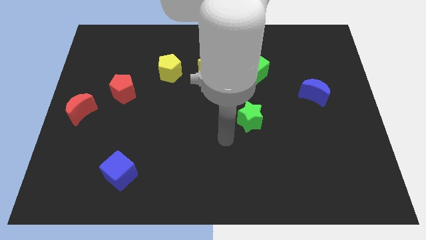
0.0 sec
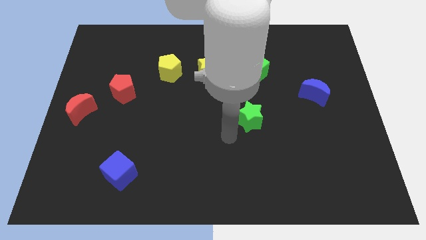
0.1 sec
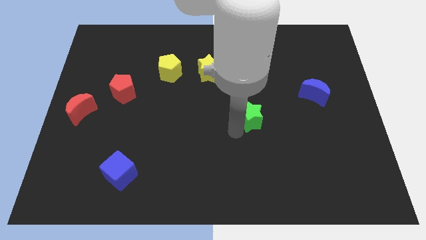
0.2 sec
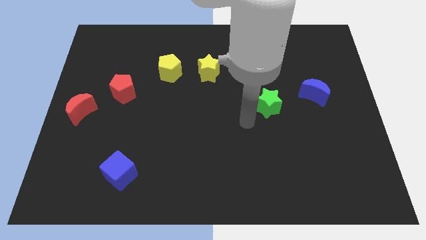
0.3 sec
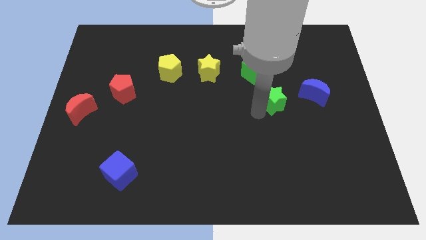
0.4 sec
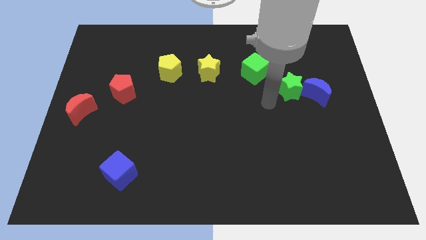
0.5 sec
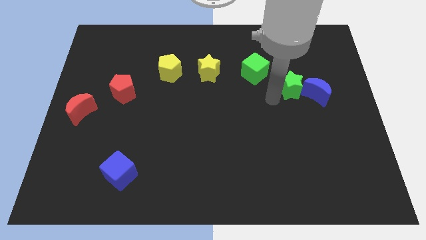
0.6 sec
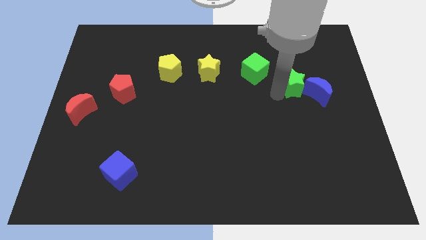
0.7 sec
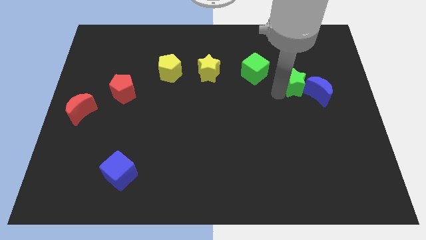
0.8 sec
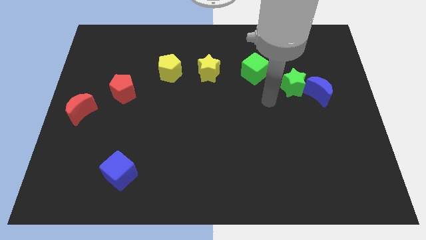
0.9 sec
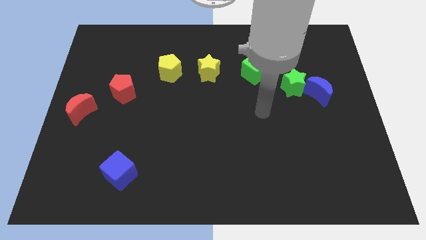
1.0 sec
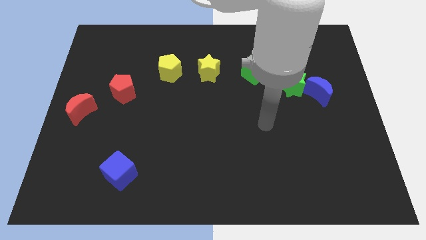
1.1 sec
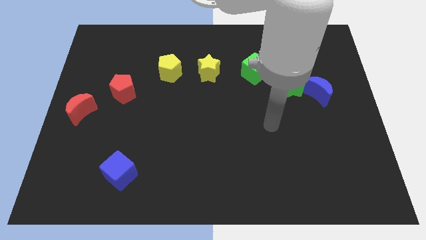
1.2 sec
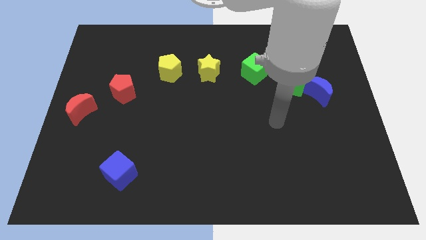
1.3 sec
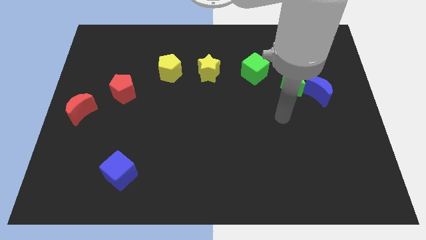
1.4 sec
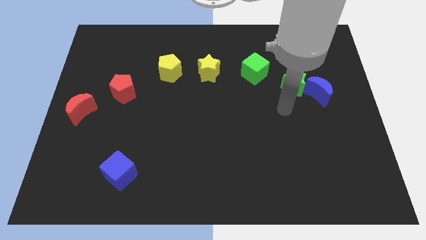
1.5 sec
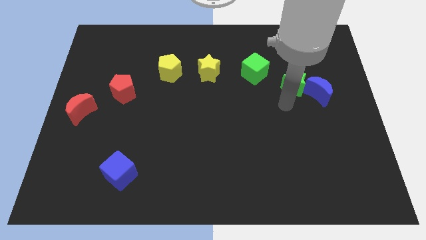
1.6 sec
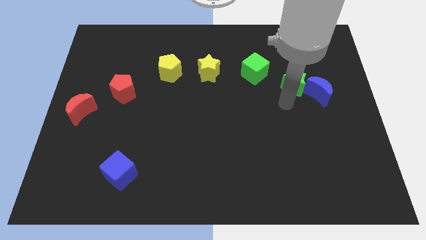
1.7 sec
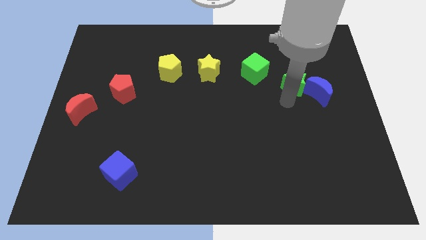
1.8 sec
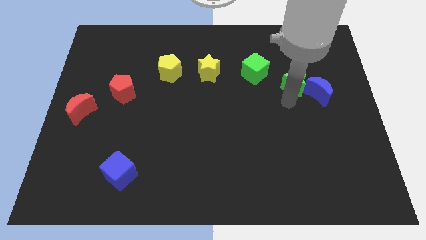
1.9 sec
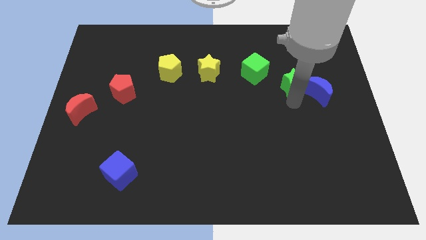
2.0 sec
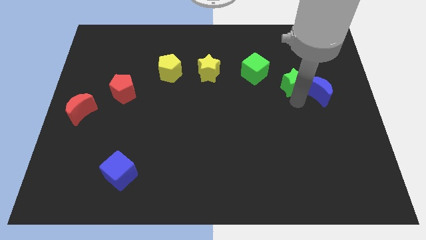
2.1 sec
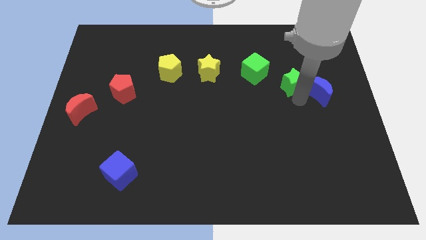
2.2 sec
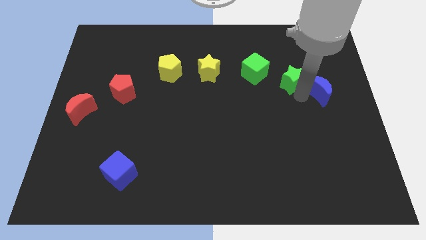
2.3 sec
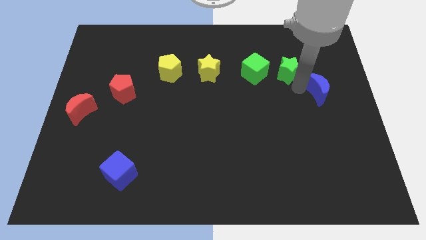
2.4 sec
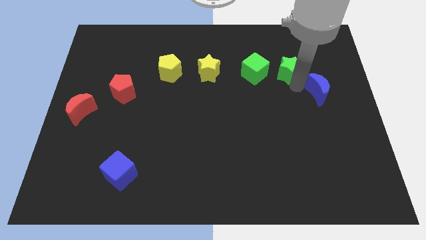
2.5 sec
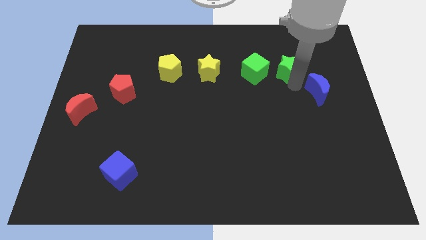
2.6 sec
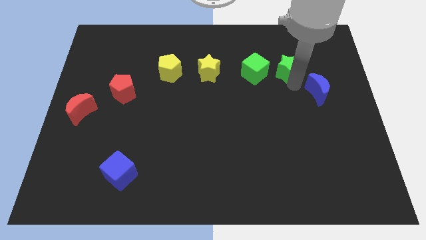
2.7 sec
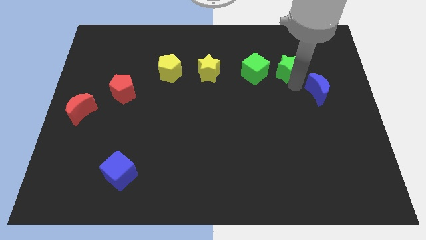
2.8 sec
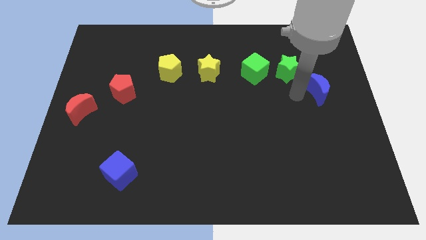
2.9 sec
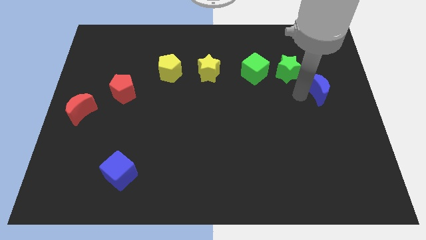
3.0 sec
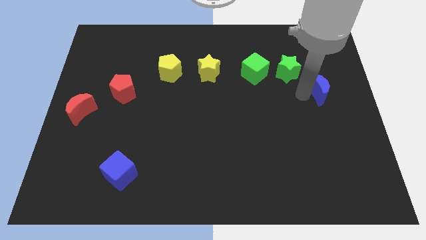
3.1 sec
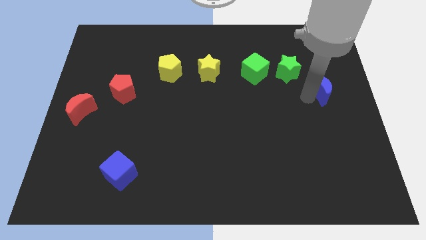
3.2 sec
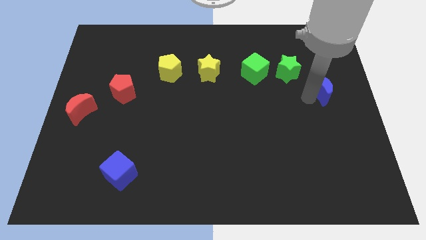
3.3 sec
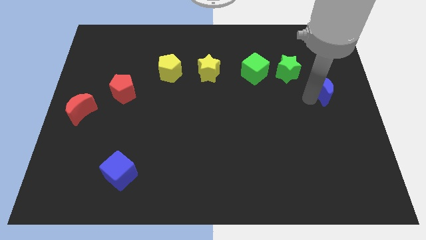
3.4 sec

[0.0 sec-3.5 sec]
move the green star to the right of the green cube

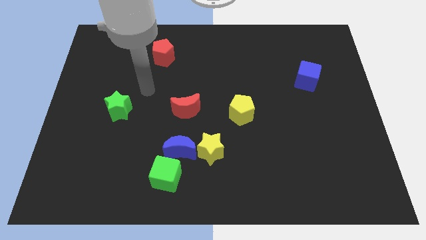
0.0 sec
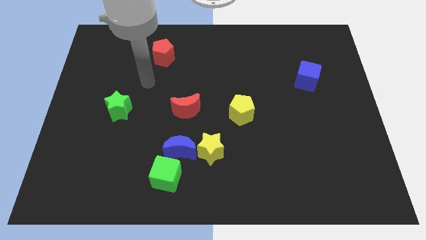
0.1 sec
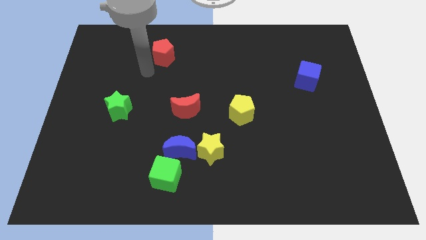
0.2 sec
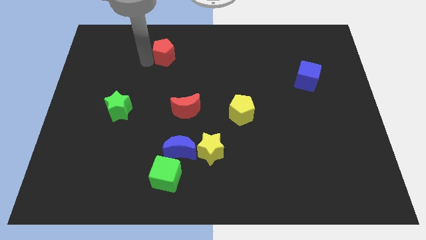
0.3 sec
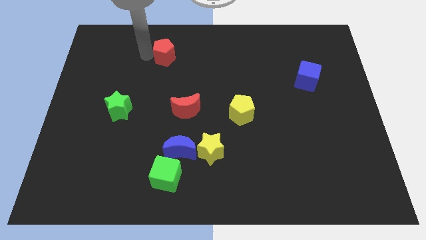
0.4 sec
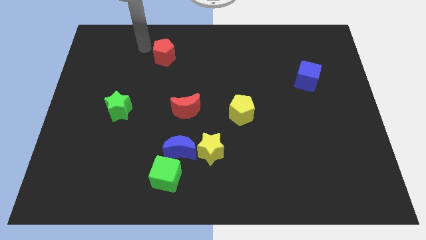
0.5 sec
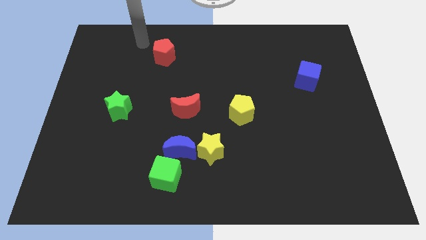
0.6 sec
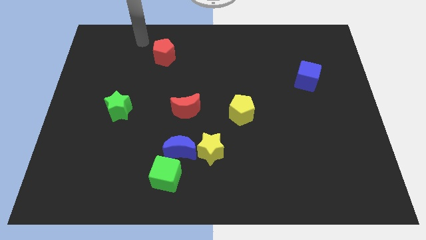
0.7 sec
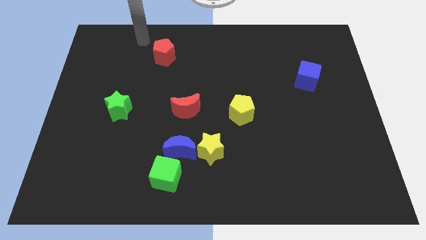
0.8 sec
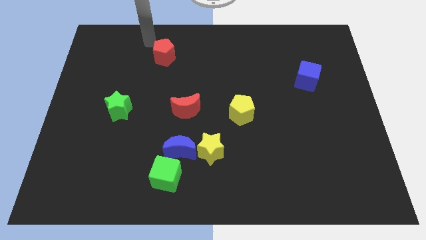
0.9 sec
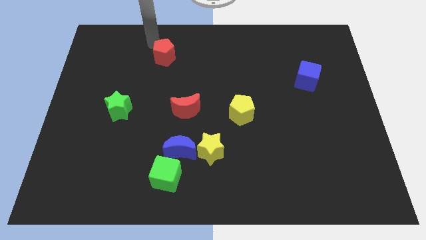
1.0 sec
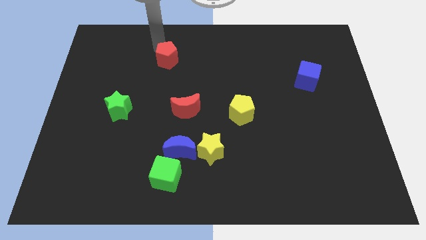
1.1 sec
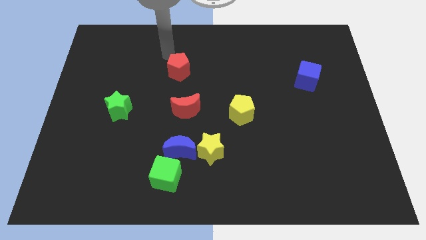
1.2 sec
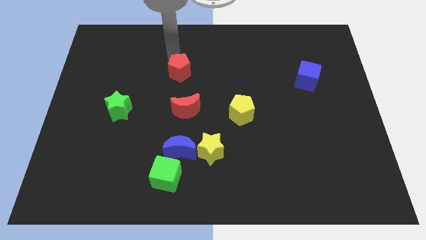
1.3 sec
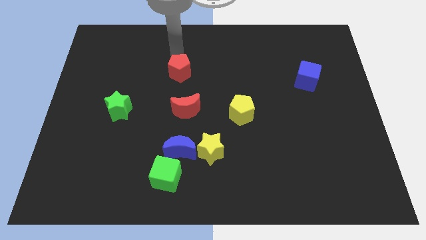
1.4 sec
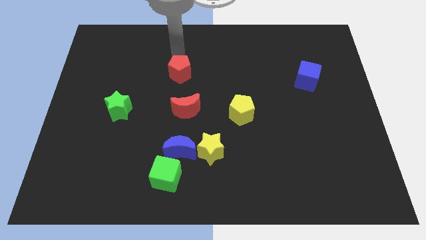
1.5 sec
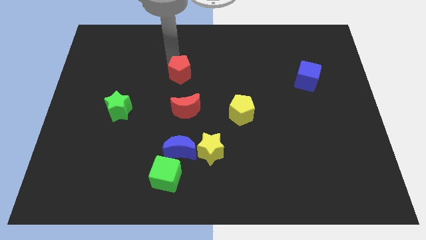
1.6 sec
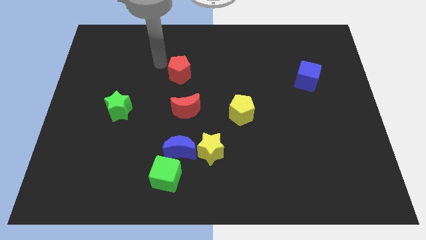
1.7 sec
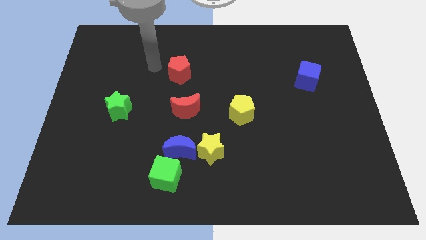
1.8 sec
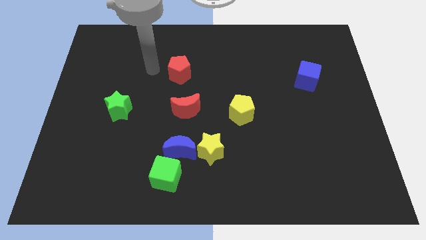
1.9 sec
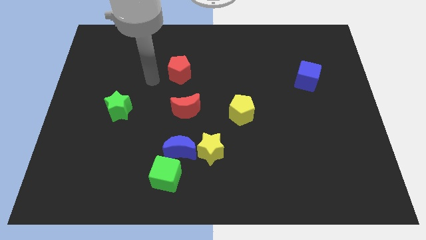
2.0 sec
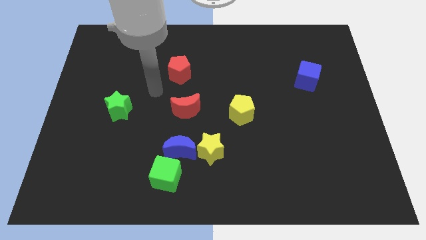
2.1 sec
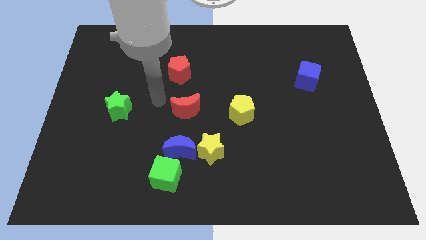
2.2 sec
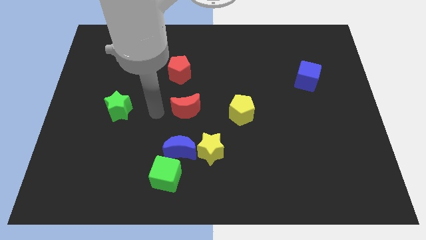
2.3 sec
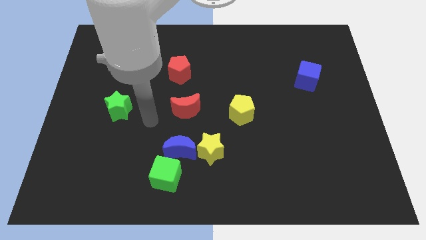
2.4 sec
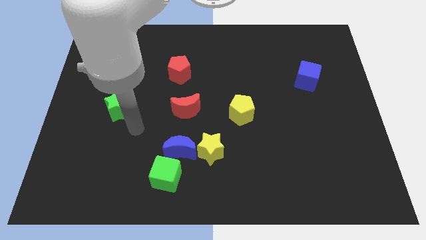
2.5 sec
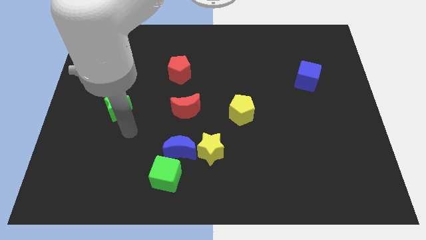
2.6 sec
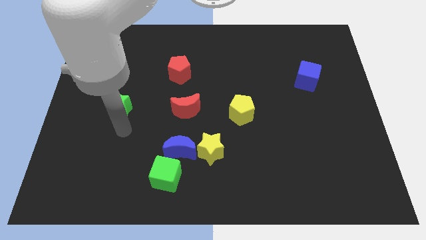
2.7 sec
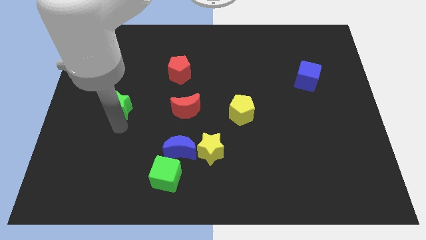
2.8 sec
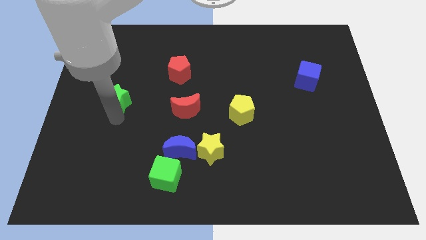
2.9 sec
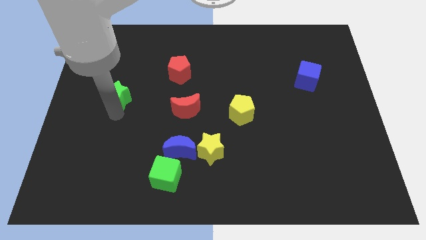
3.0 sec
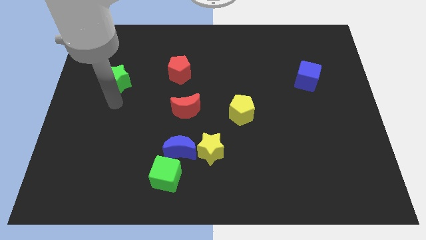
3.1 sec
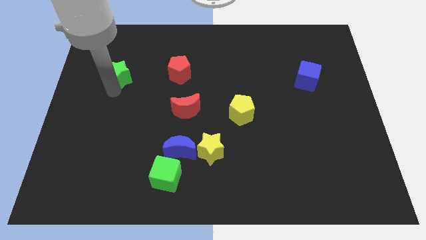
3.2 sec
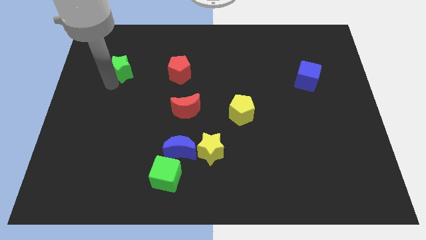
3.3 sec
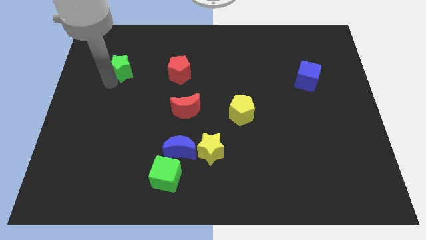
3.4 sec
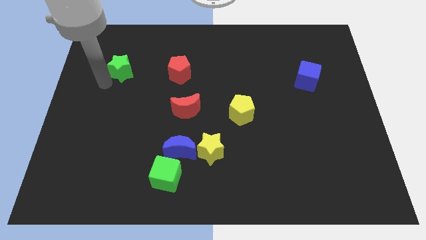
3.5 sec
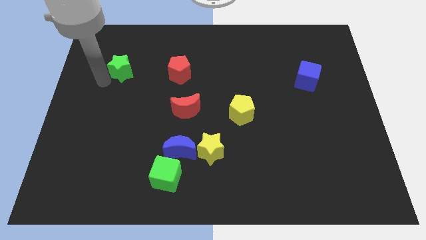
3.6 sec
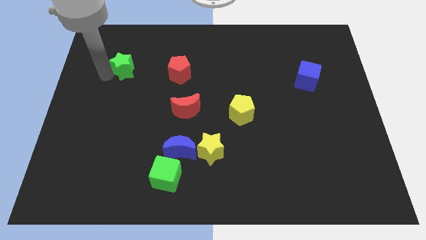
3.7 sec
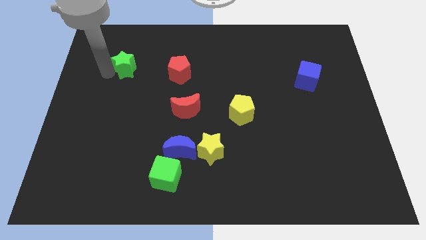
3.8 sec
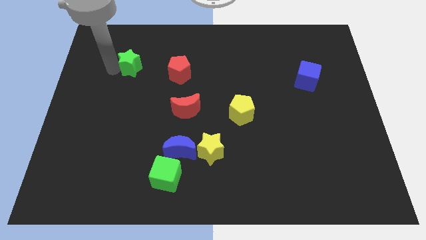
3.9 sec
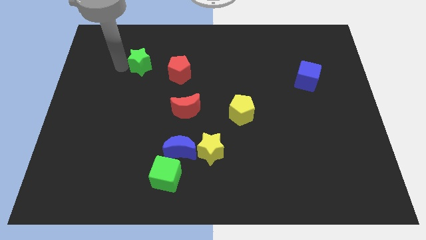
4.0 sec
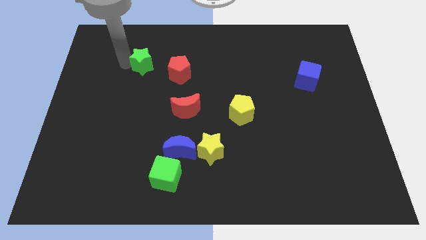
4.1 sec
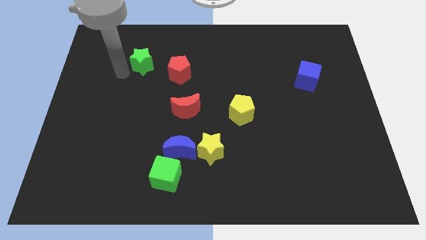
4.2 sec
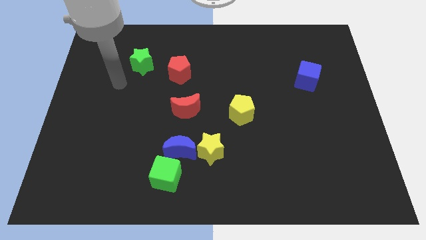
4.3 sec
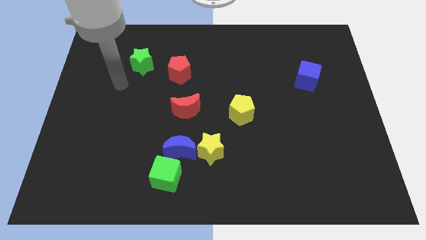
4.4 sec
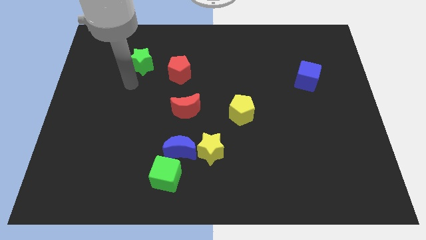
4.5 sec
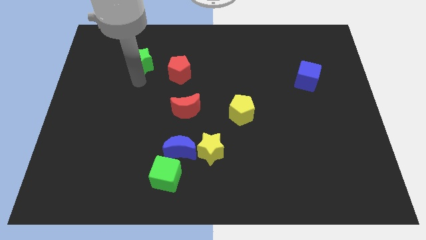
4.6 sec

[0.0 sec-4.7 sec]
push the red pentagon towards the red crescent

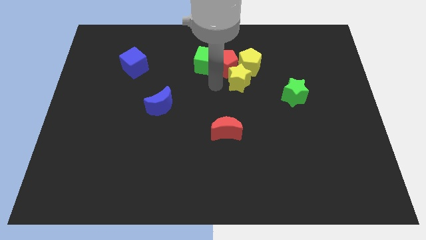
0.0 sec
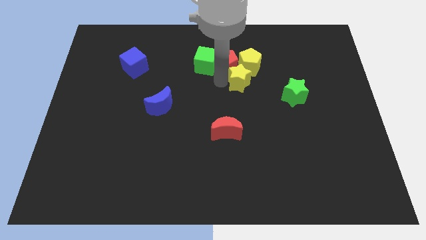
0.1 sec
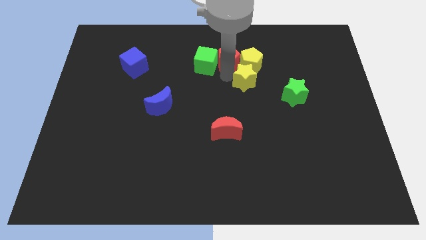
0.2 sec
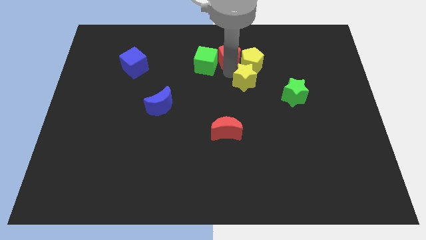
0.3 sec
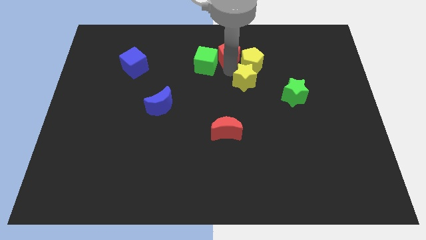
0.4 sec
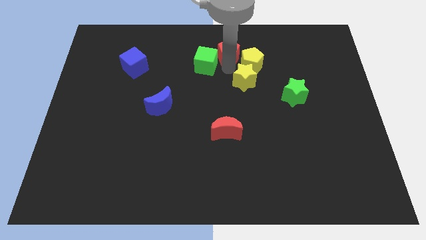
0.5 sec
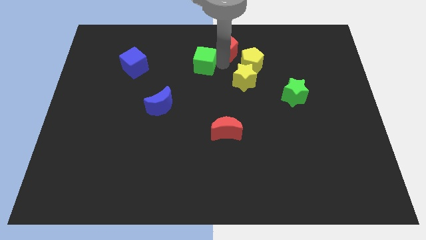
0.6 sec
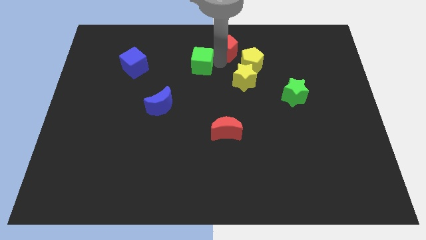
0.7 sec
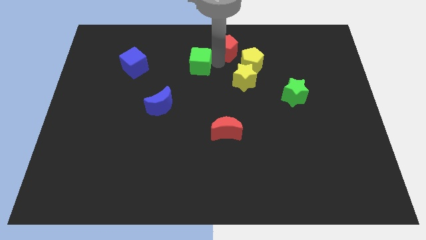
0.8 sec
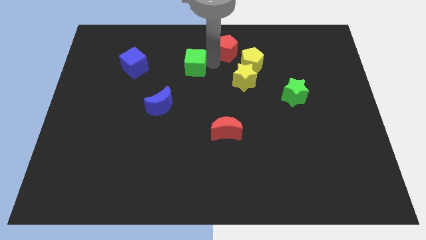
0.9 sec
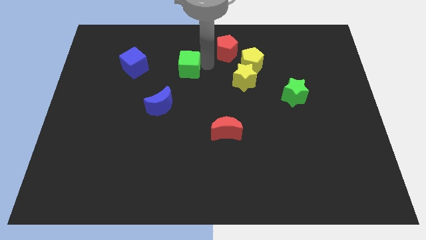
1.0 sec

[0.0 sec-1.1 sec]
separate the green cube from the group of blocks

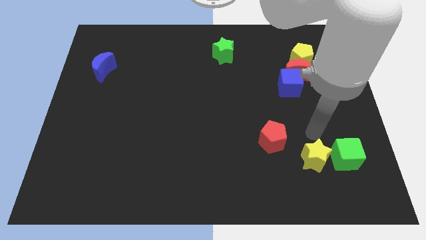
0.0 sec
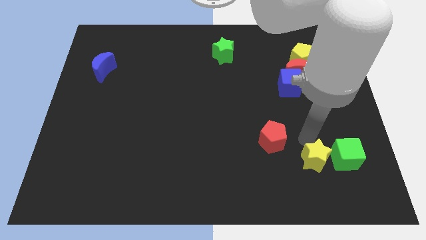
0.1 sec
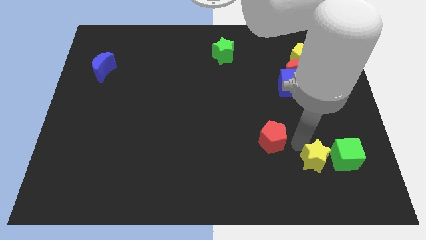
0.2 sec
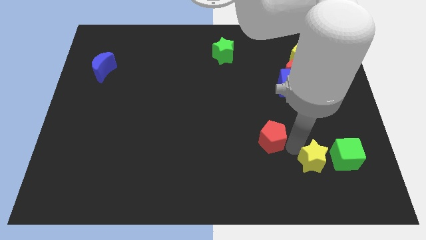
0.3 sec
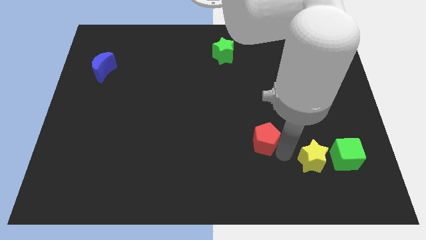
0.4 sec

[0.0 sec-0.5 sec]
place your arm in between yellow star and red pentagon
